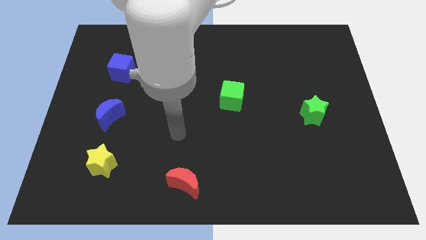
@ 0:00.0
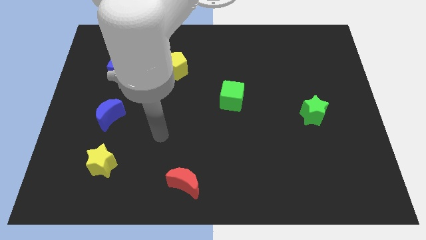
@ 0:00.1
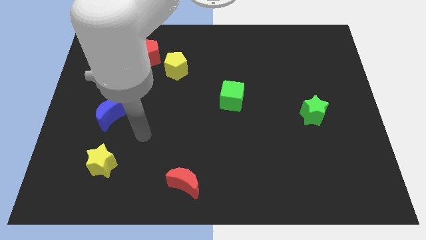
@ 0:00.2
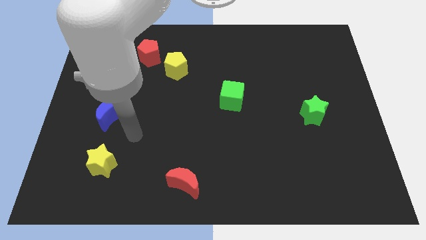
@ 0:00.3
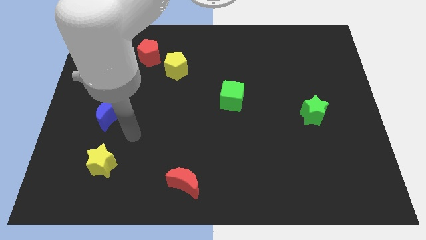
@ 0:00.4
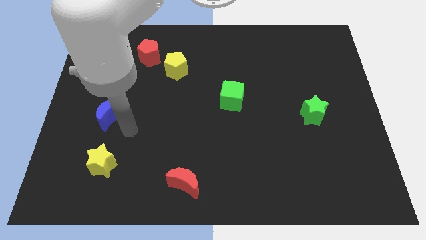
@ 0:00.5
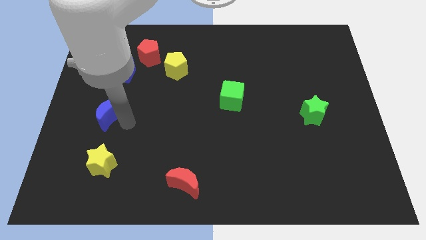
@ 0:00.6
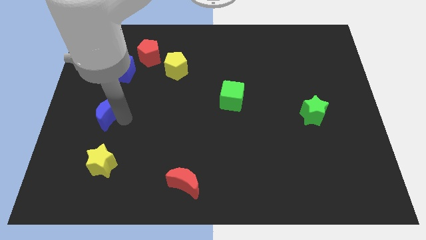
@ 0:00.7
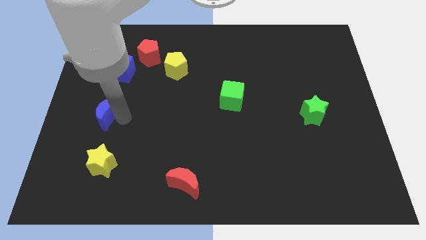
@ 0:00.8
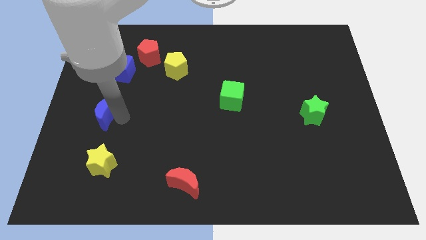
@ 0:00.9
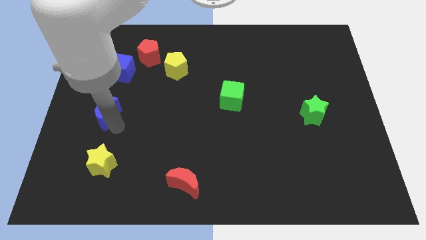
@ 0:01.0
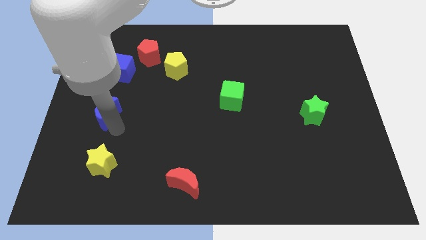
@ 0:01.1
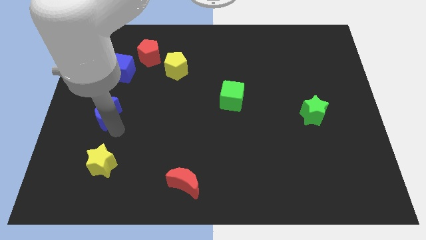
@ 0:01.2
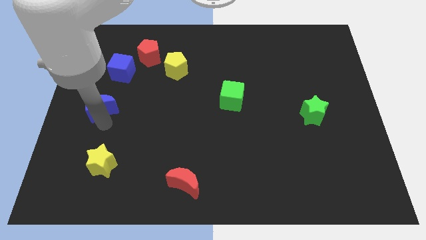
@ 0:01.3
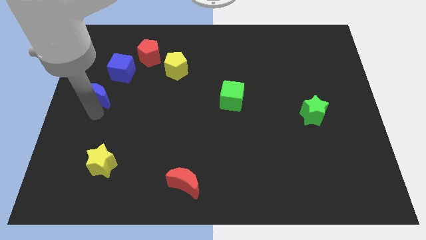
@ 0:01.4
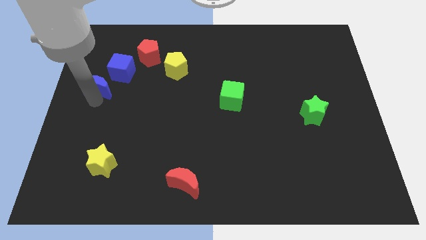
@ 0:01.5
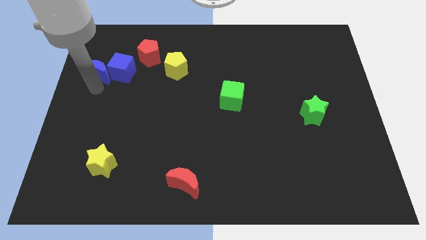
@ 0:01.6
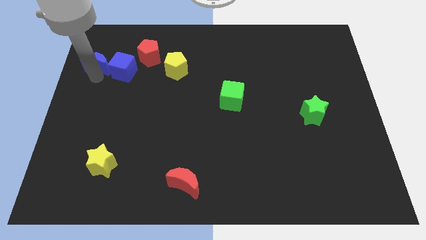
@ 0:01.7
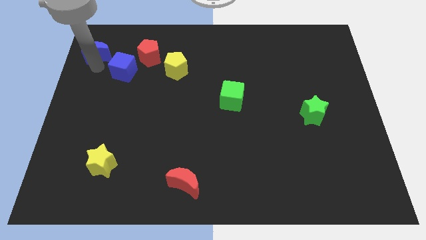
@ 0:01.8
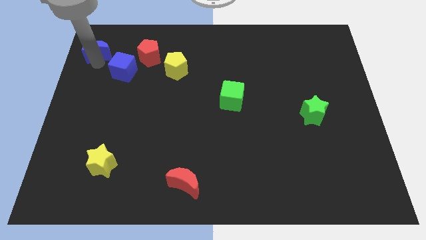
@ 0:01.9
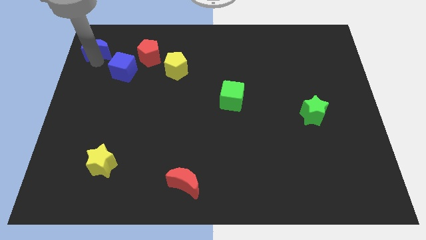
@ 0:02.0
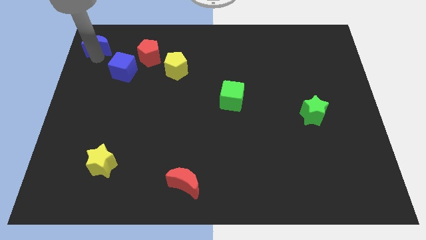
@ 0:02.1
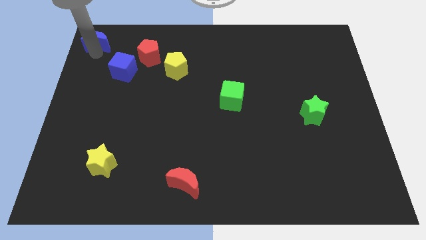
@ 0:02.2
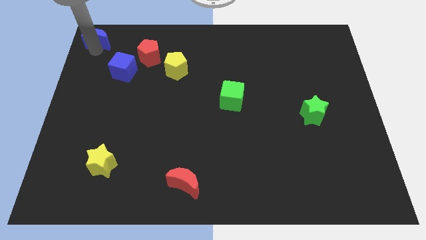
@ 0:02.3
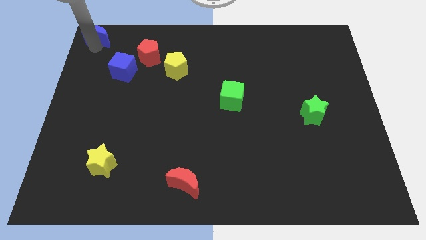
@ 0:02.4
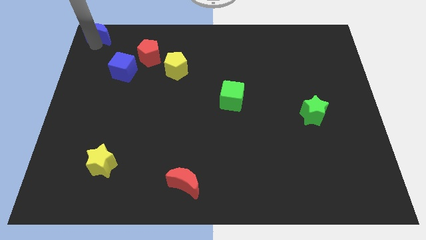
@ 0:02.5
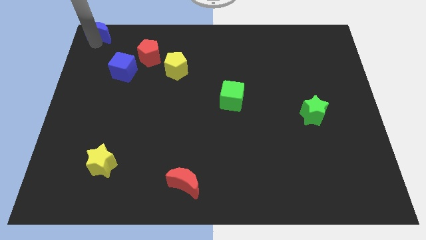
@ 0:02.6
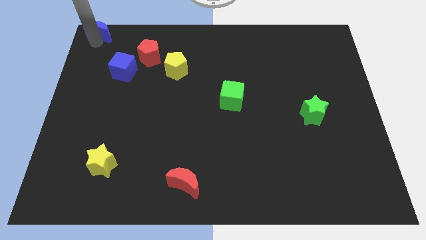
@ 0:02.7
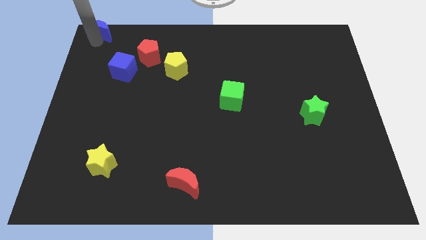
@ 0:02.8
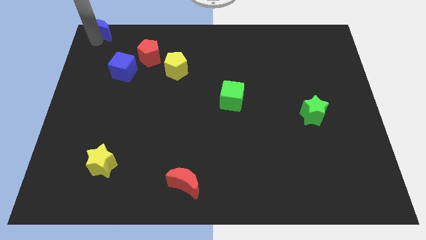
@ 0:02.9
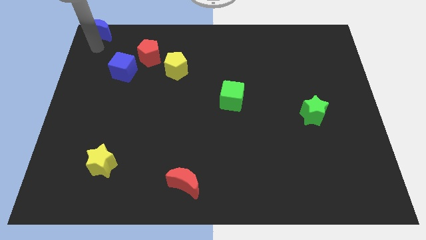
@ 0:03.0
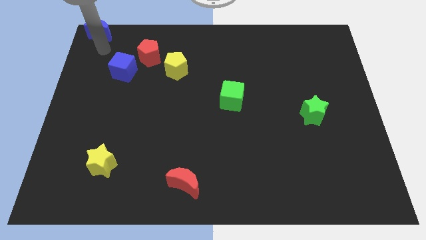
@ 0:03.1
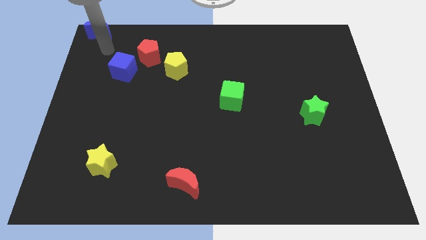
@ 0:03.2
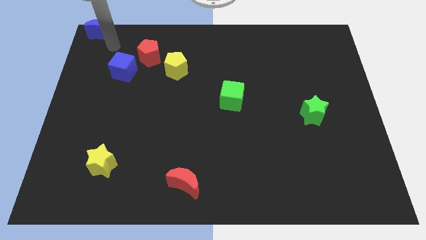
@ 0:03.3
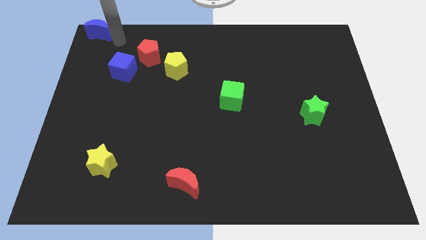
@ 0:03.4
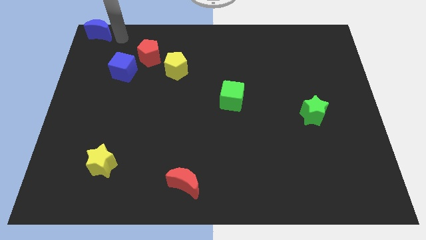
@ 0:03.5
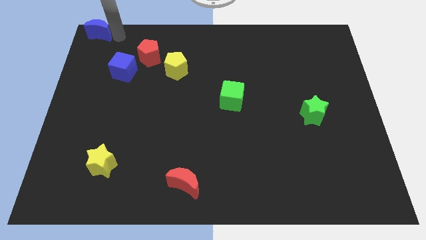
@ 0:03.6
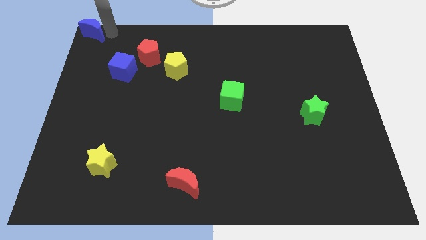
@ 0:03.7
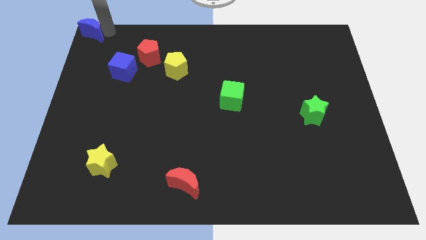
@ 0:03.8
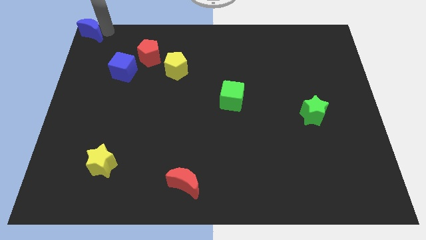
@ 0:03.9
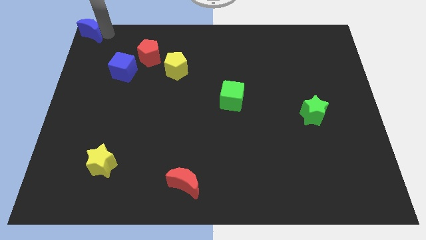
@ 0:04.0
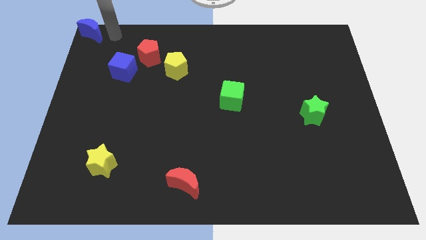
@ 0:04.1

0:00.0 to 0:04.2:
place the blue moon at the top left corner of the board

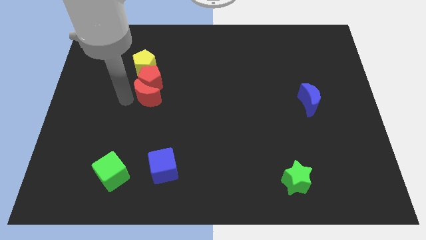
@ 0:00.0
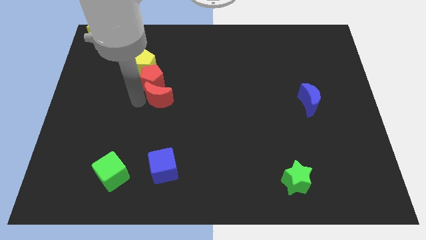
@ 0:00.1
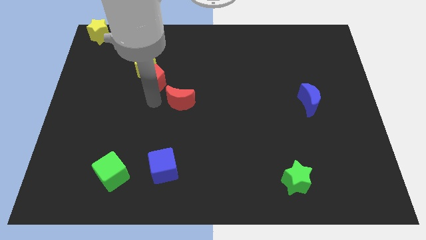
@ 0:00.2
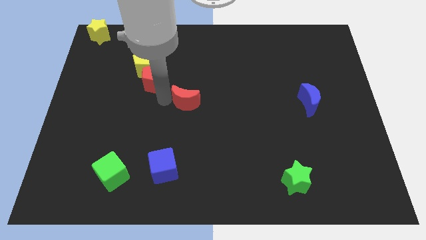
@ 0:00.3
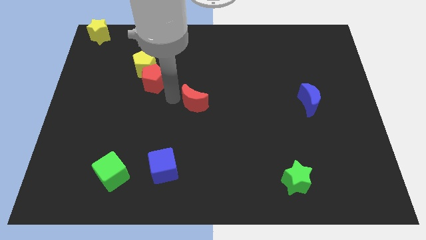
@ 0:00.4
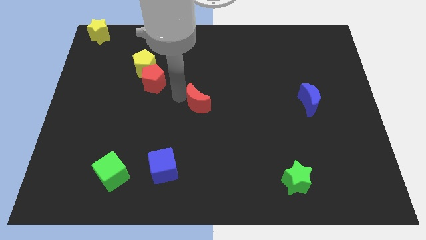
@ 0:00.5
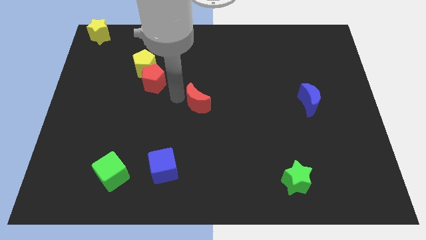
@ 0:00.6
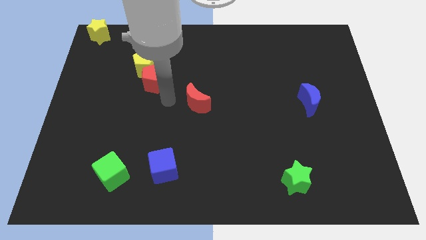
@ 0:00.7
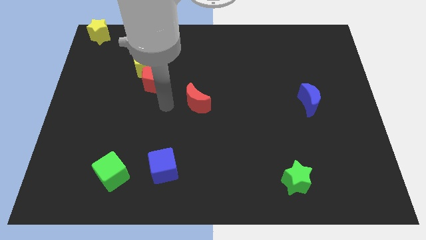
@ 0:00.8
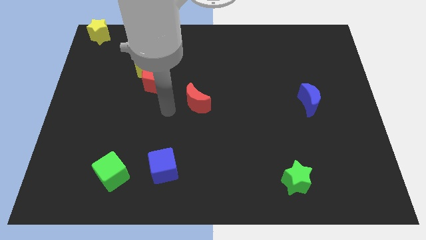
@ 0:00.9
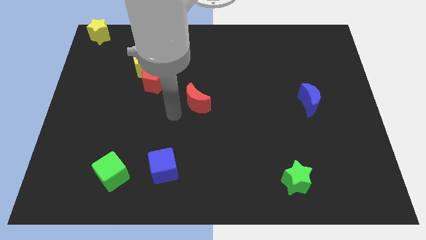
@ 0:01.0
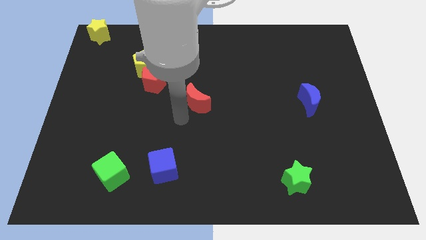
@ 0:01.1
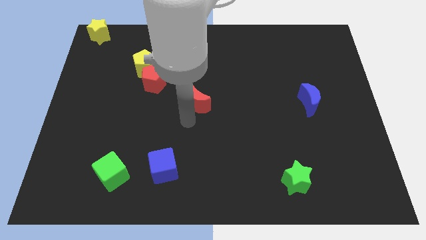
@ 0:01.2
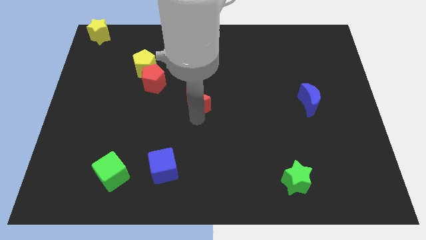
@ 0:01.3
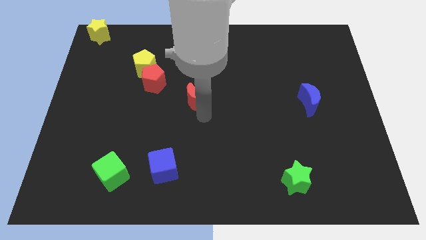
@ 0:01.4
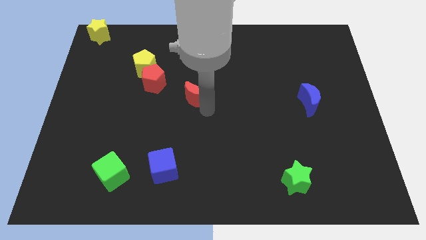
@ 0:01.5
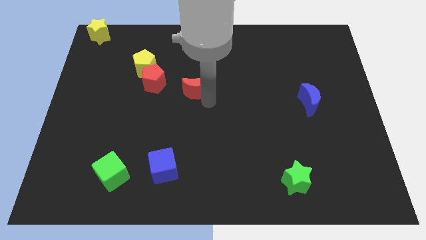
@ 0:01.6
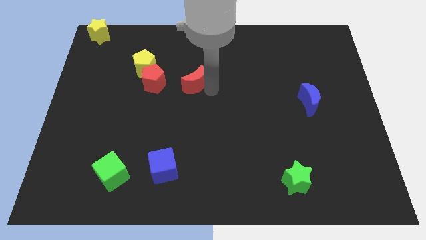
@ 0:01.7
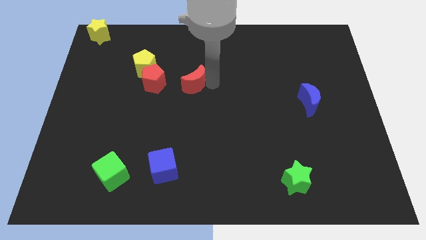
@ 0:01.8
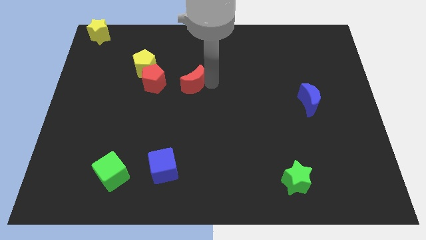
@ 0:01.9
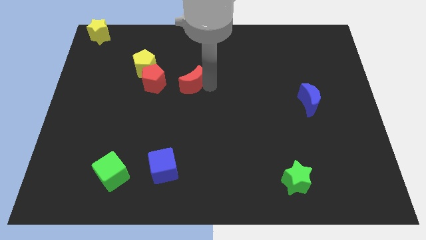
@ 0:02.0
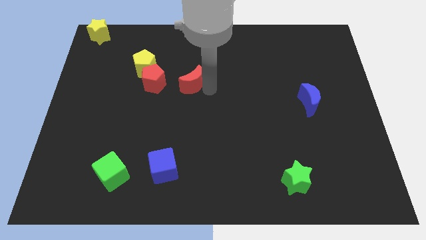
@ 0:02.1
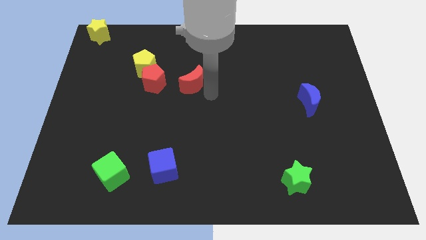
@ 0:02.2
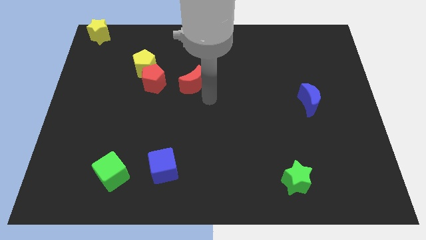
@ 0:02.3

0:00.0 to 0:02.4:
move the red crescent to the right of the red pentagon

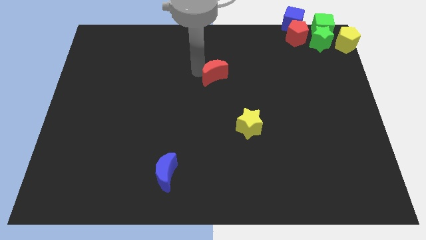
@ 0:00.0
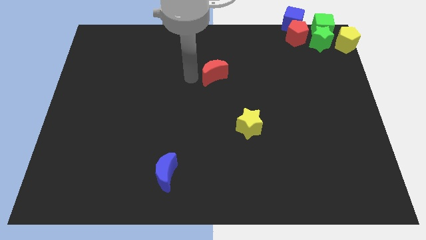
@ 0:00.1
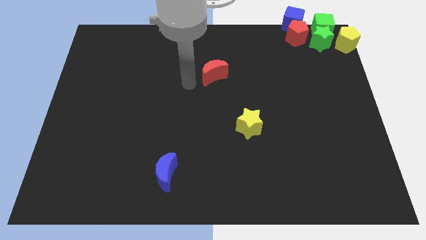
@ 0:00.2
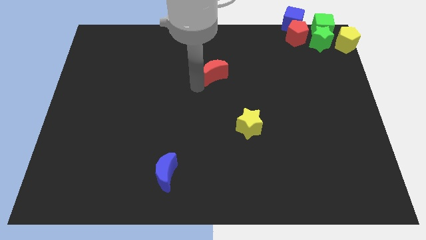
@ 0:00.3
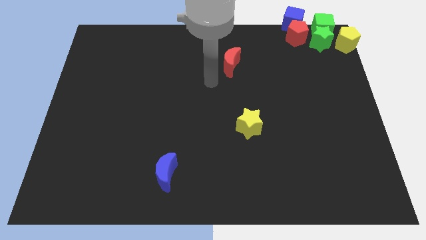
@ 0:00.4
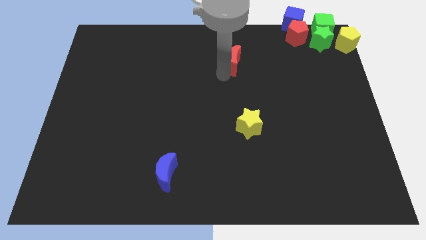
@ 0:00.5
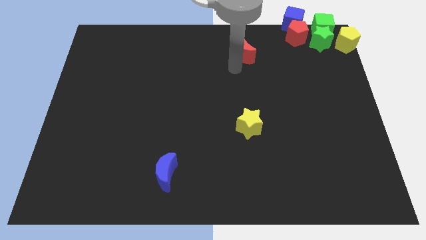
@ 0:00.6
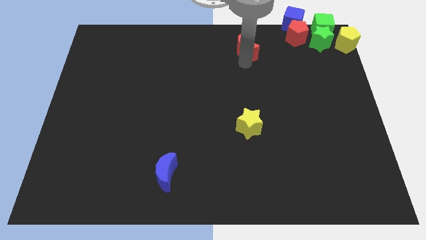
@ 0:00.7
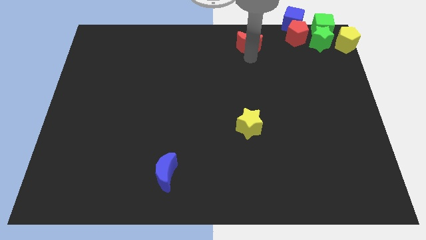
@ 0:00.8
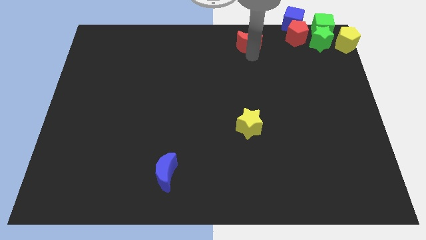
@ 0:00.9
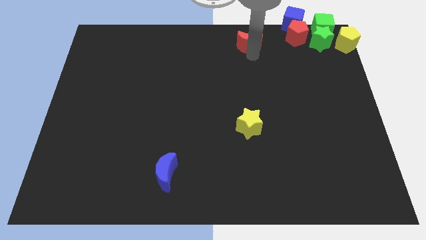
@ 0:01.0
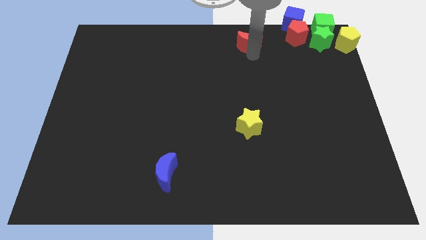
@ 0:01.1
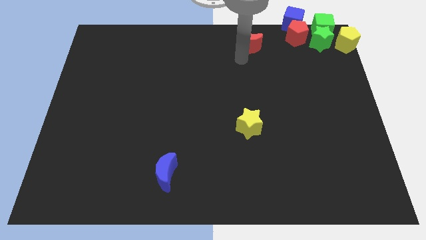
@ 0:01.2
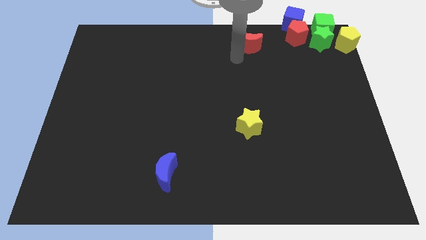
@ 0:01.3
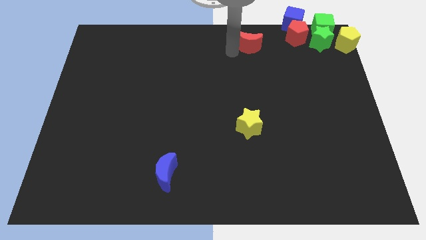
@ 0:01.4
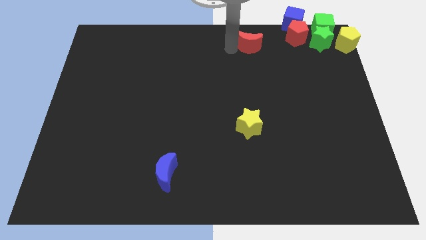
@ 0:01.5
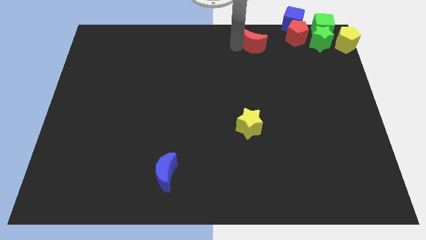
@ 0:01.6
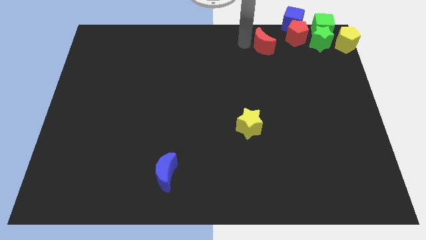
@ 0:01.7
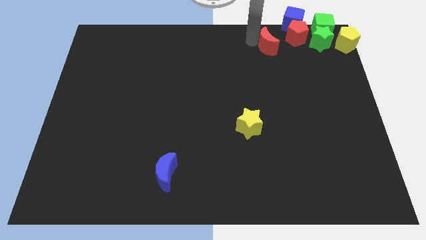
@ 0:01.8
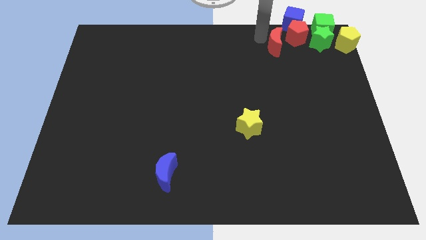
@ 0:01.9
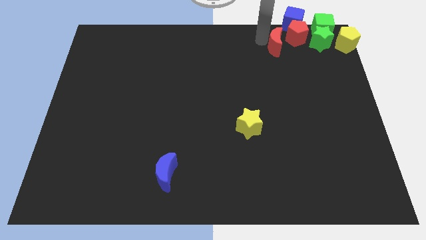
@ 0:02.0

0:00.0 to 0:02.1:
push the red crescent close to the red pentagon

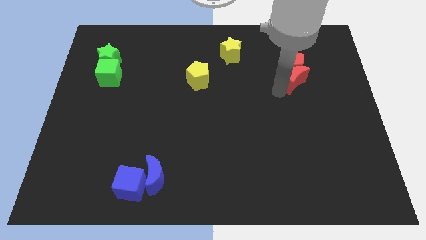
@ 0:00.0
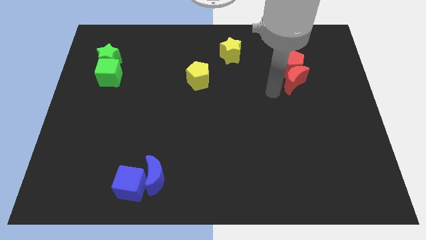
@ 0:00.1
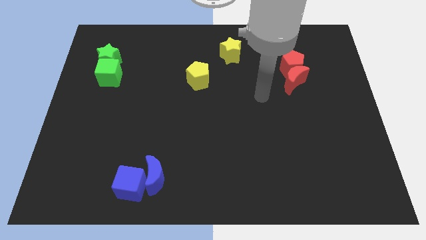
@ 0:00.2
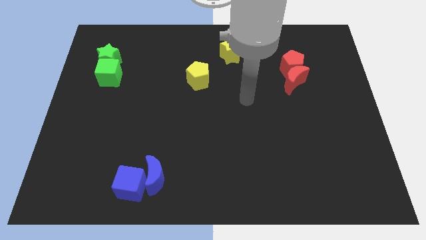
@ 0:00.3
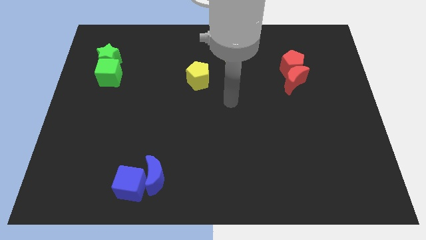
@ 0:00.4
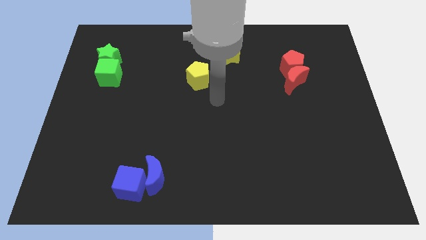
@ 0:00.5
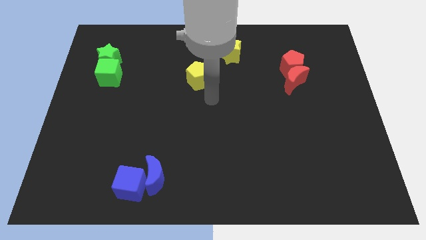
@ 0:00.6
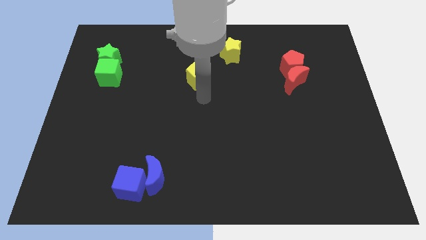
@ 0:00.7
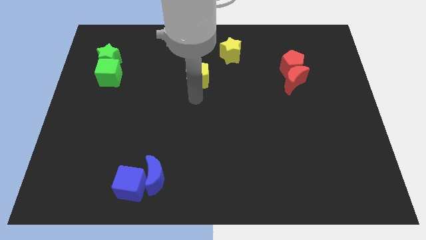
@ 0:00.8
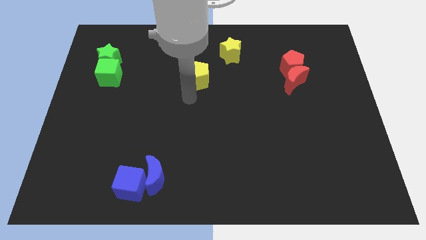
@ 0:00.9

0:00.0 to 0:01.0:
point your arm at the bottom of the yellow pentagon
